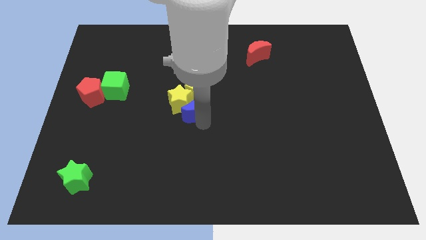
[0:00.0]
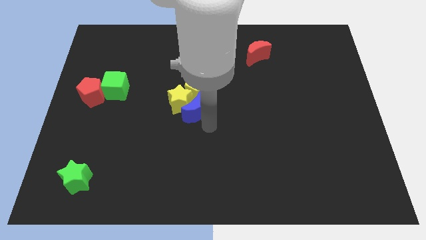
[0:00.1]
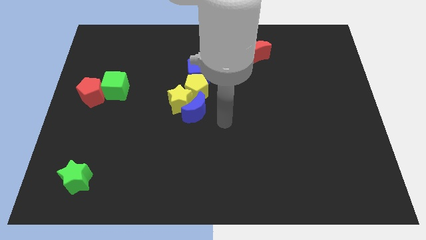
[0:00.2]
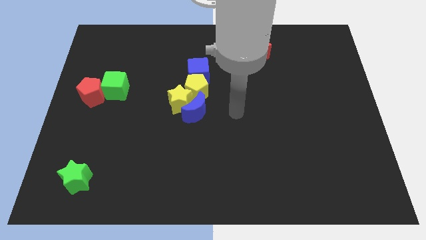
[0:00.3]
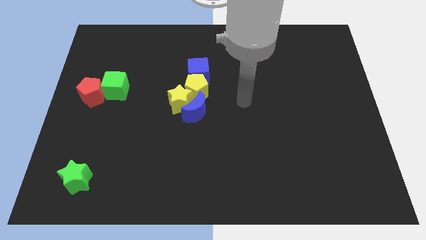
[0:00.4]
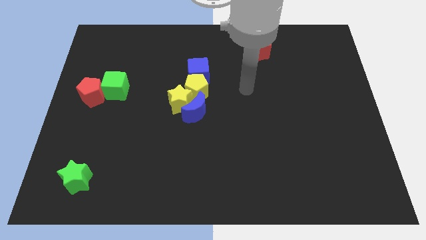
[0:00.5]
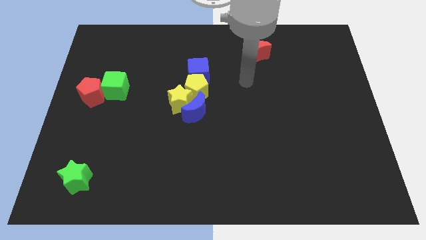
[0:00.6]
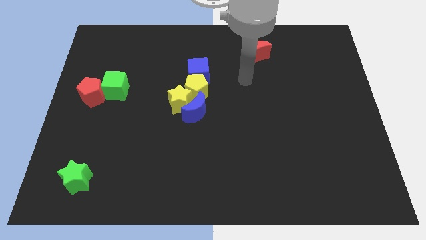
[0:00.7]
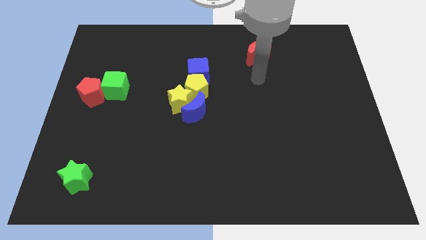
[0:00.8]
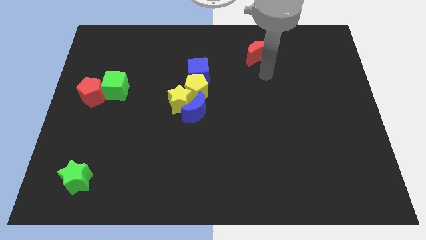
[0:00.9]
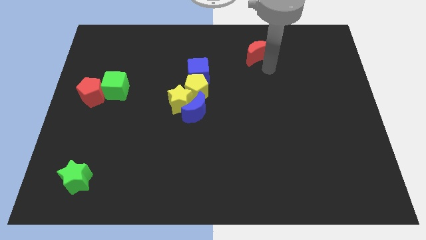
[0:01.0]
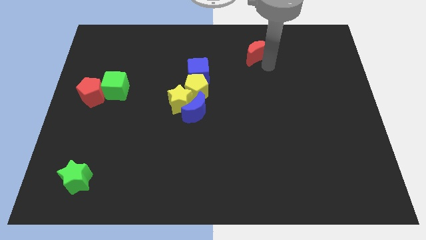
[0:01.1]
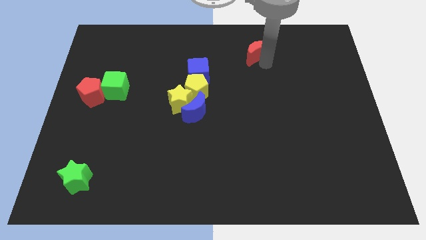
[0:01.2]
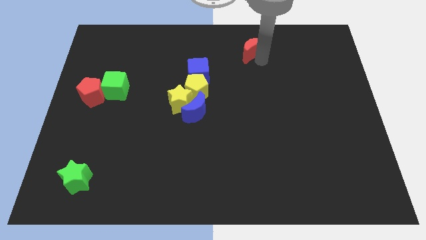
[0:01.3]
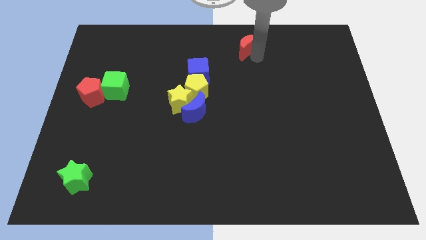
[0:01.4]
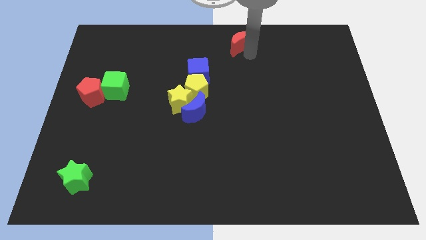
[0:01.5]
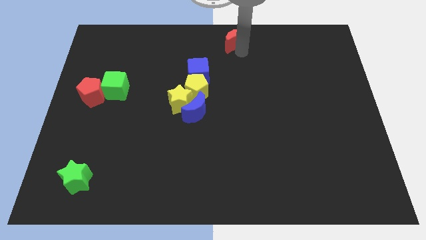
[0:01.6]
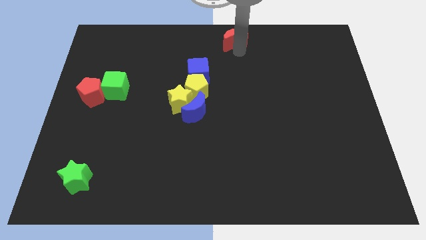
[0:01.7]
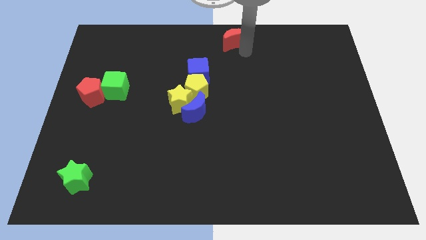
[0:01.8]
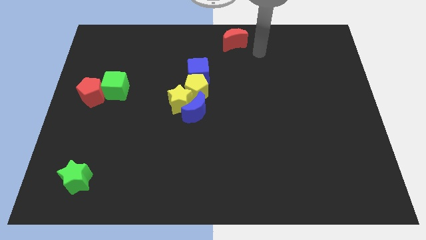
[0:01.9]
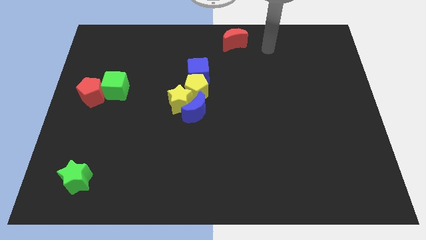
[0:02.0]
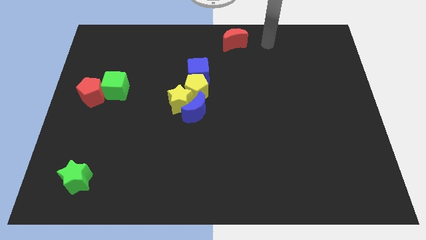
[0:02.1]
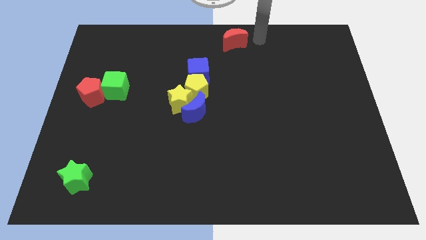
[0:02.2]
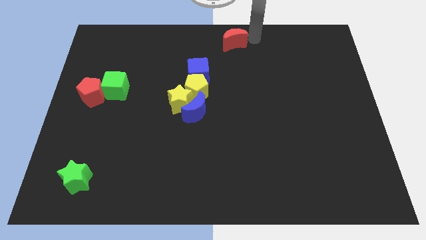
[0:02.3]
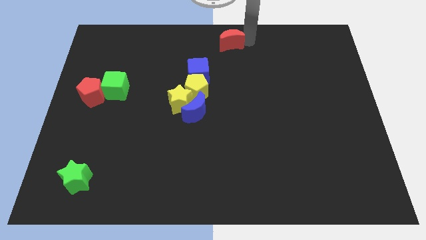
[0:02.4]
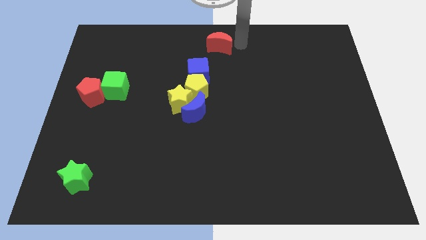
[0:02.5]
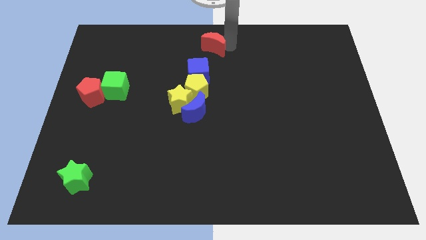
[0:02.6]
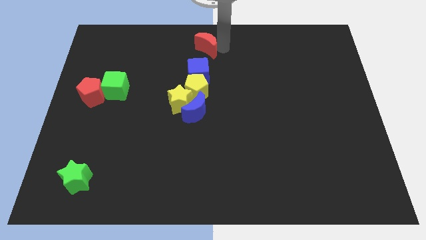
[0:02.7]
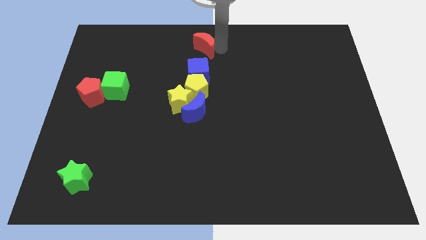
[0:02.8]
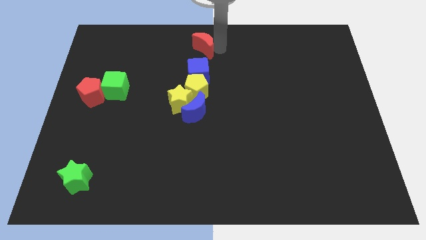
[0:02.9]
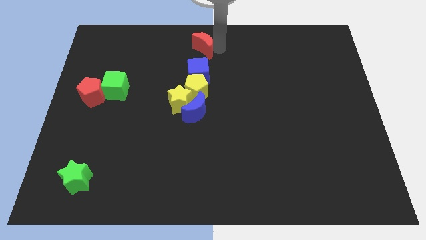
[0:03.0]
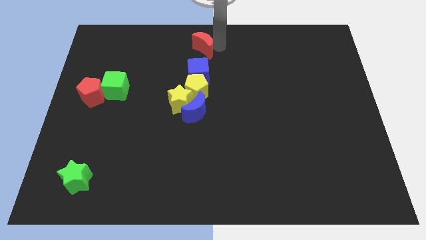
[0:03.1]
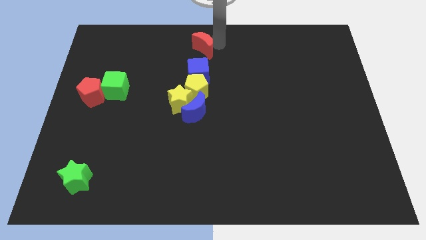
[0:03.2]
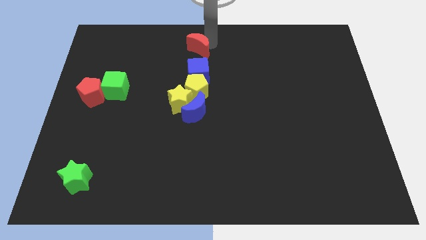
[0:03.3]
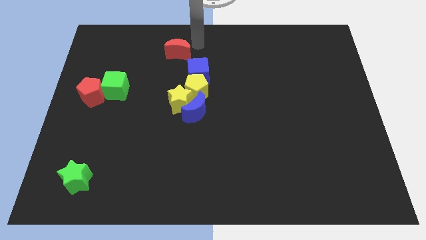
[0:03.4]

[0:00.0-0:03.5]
push the red crescent above the blue cube

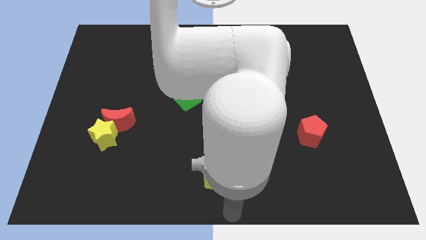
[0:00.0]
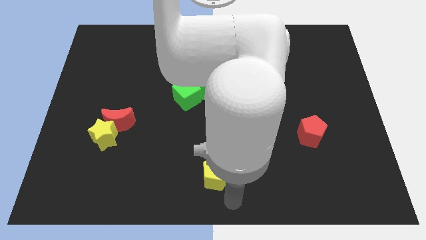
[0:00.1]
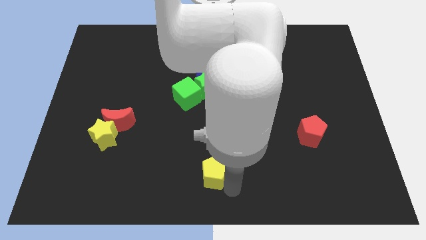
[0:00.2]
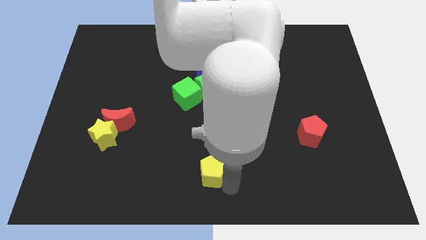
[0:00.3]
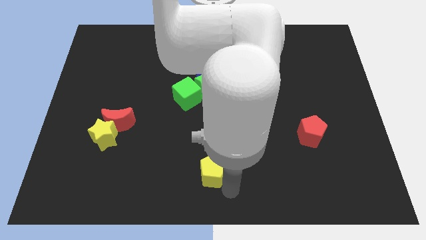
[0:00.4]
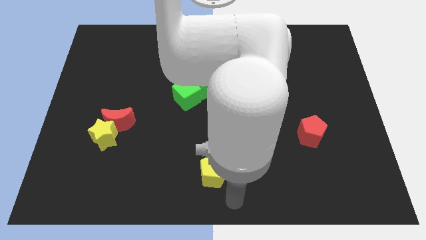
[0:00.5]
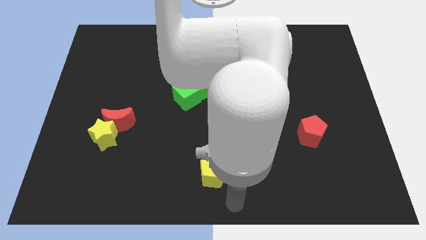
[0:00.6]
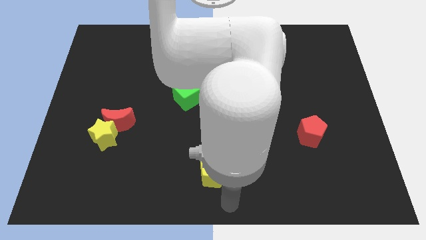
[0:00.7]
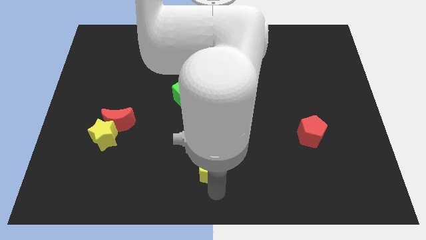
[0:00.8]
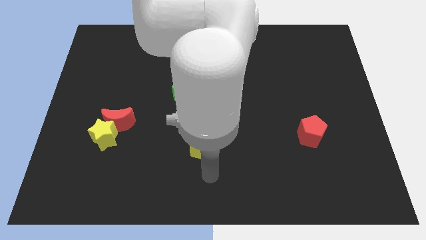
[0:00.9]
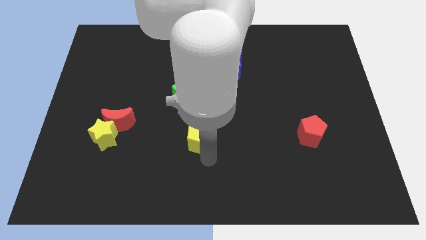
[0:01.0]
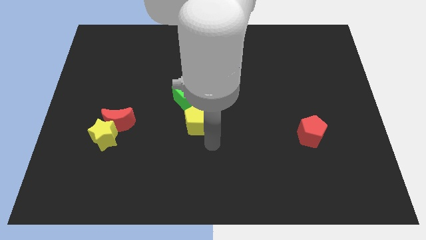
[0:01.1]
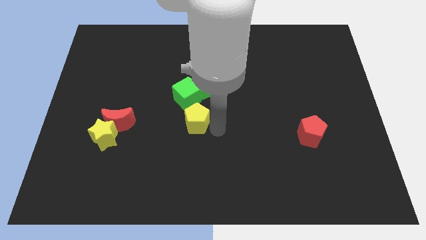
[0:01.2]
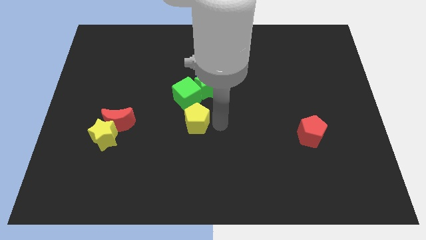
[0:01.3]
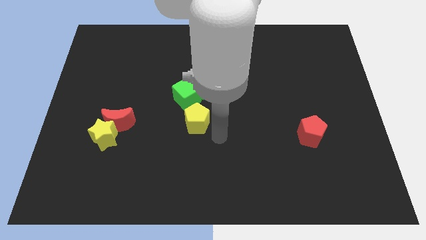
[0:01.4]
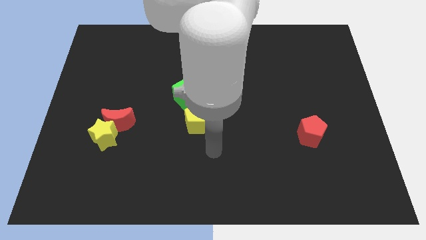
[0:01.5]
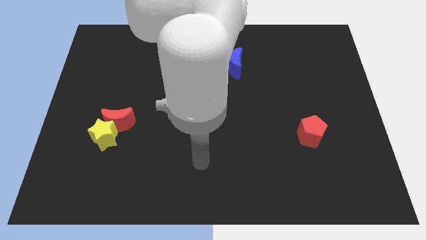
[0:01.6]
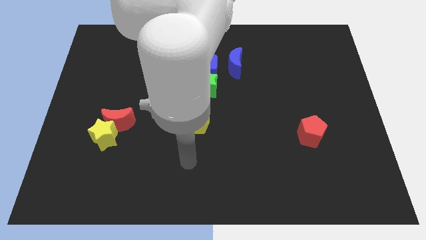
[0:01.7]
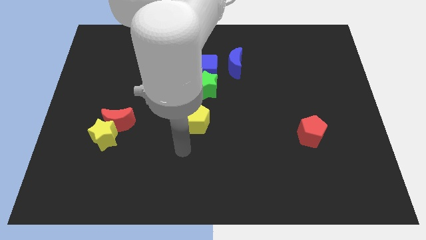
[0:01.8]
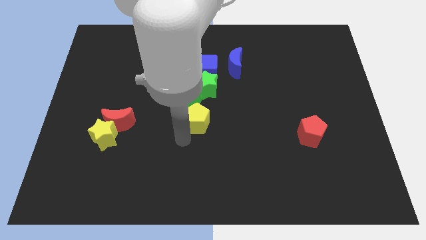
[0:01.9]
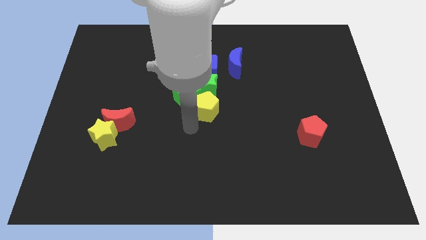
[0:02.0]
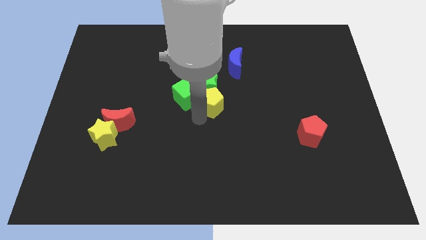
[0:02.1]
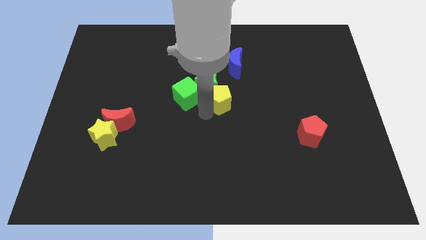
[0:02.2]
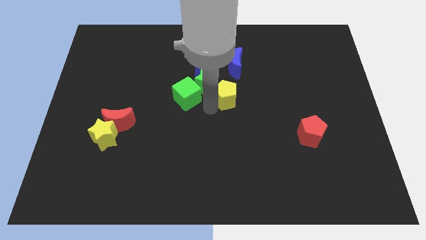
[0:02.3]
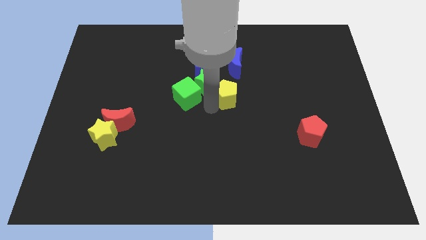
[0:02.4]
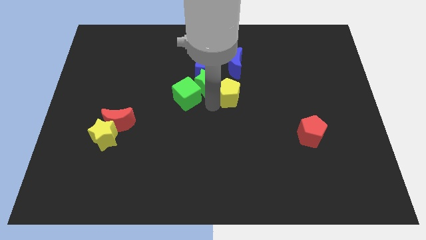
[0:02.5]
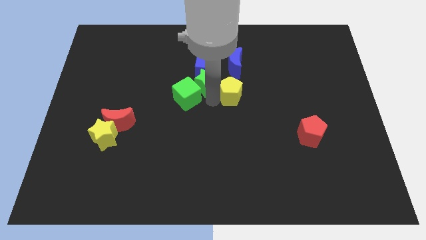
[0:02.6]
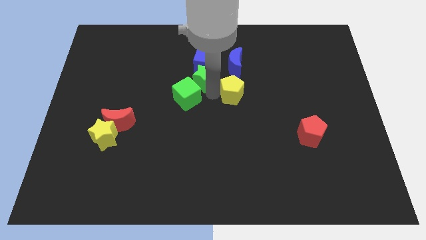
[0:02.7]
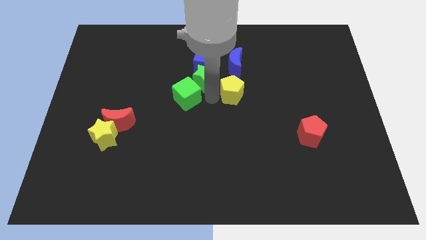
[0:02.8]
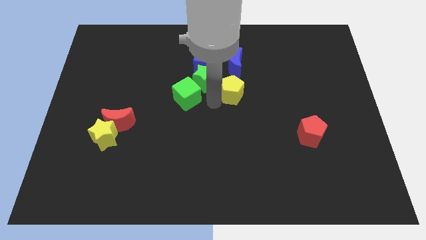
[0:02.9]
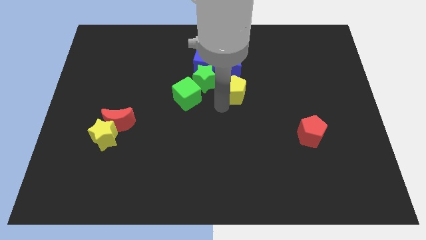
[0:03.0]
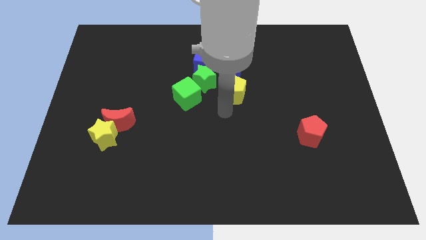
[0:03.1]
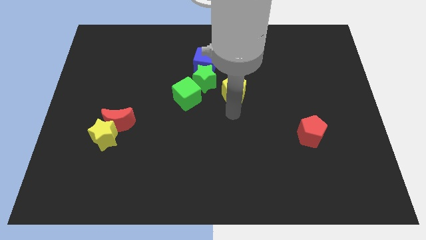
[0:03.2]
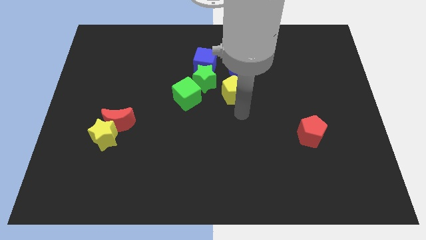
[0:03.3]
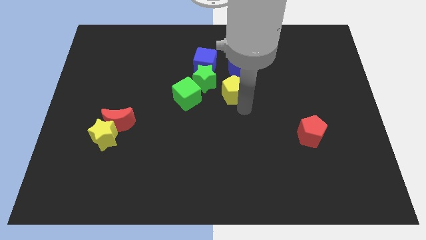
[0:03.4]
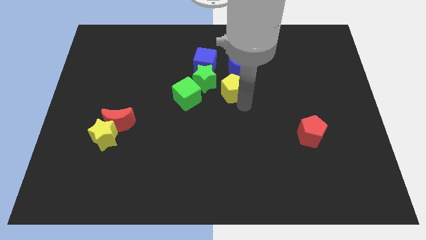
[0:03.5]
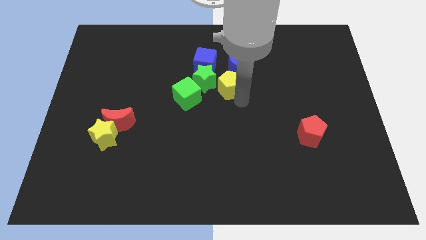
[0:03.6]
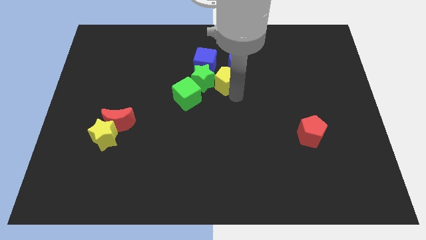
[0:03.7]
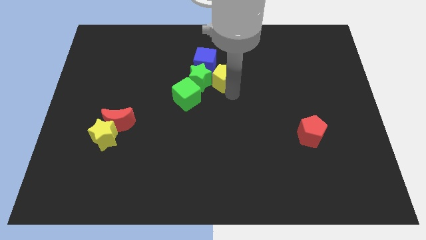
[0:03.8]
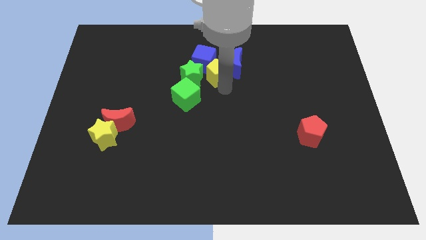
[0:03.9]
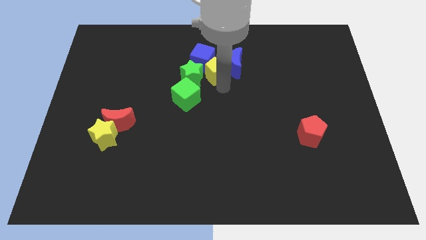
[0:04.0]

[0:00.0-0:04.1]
move the yellow pentagon into green star

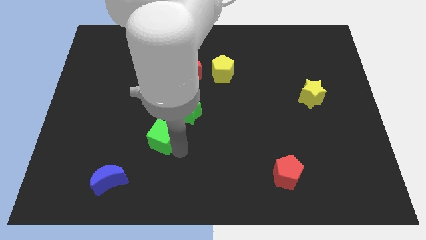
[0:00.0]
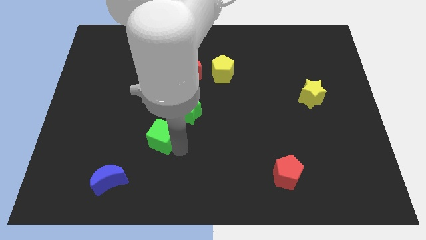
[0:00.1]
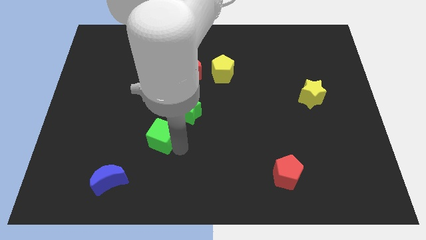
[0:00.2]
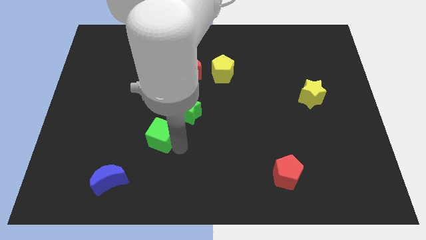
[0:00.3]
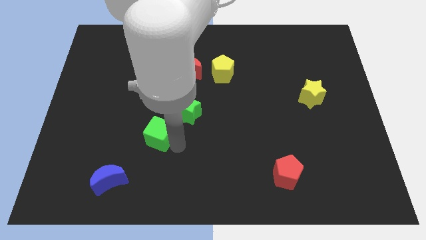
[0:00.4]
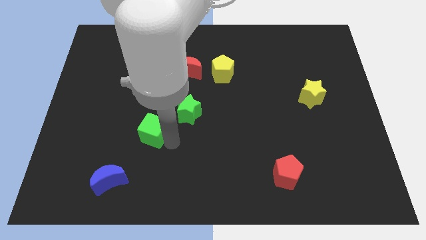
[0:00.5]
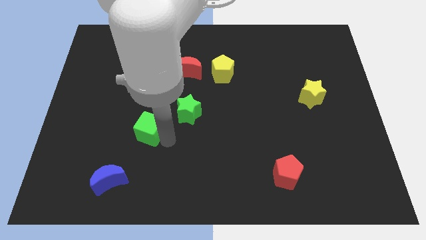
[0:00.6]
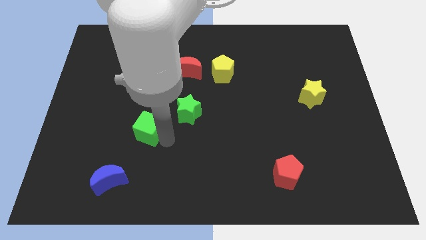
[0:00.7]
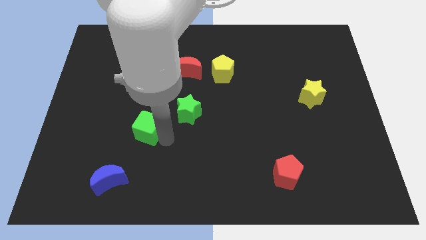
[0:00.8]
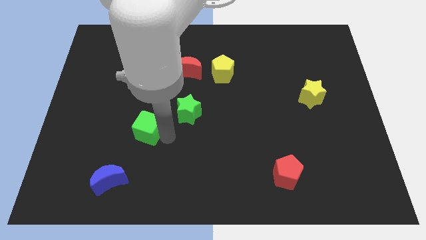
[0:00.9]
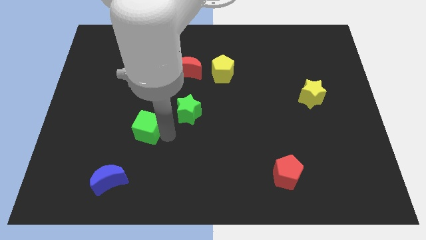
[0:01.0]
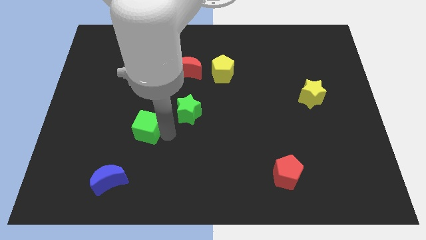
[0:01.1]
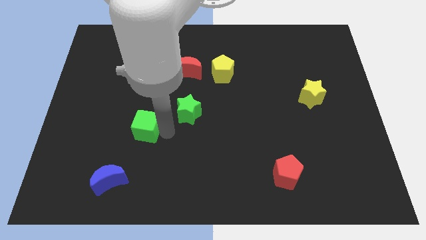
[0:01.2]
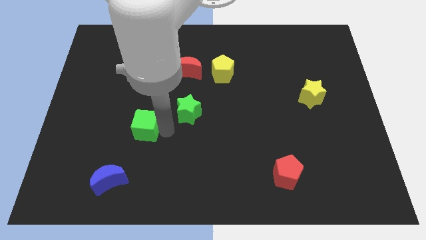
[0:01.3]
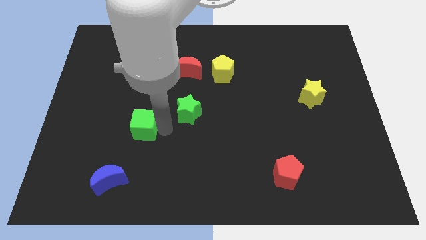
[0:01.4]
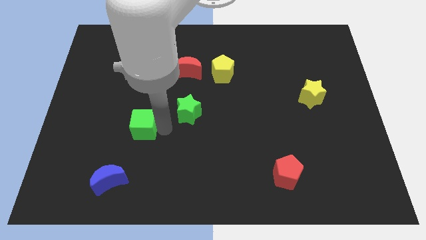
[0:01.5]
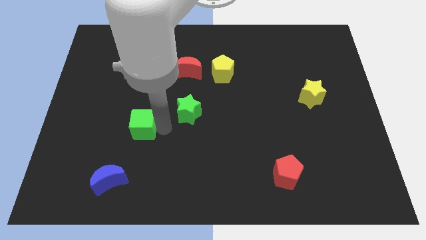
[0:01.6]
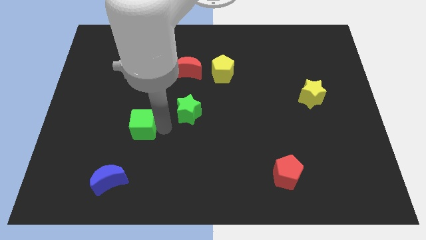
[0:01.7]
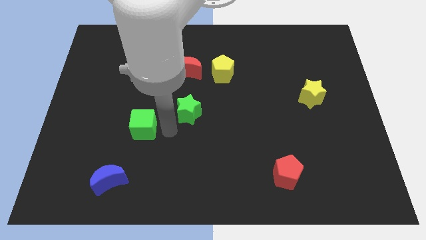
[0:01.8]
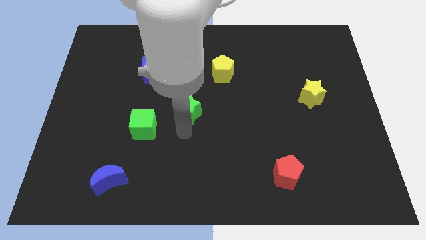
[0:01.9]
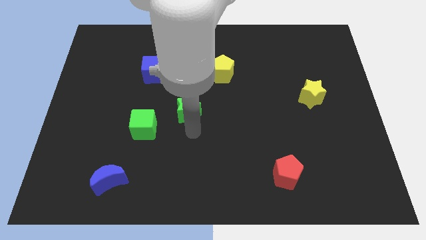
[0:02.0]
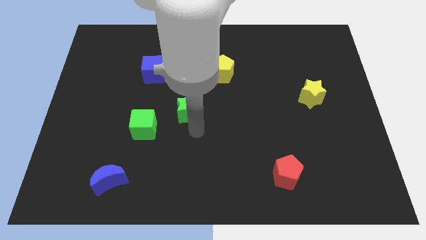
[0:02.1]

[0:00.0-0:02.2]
move green cube to the top right of blue moon
